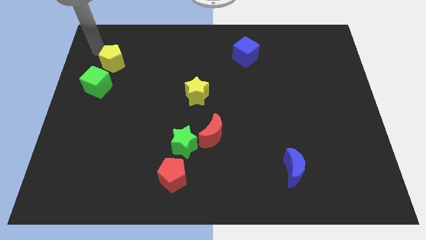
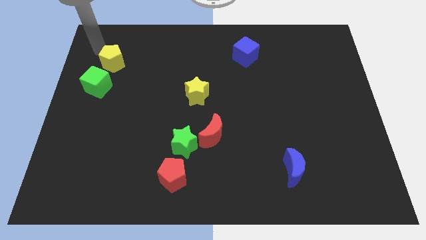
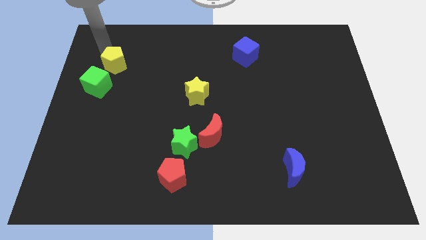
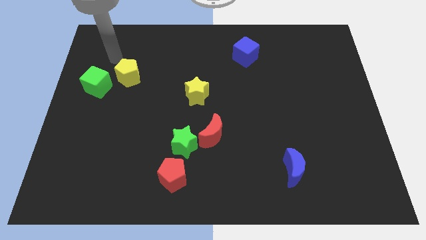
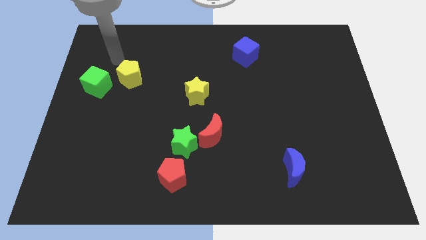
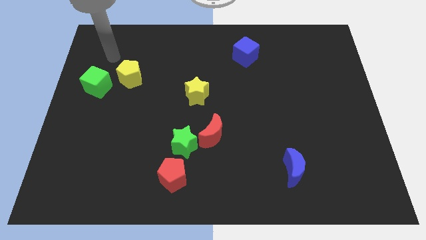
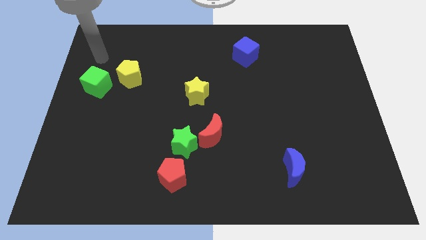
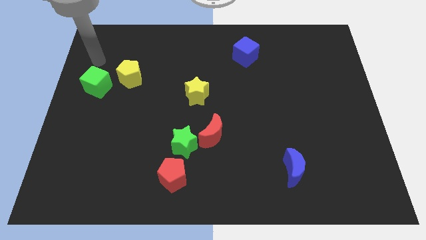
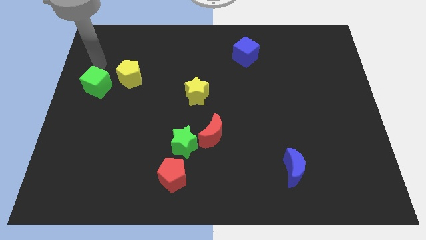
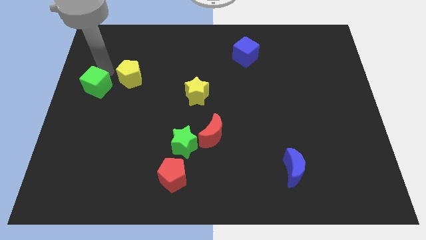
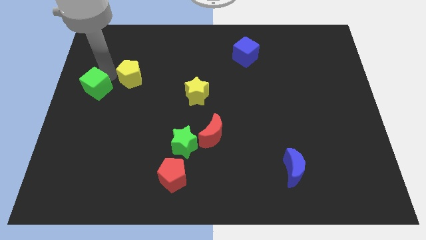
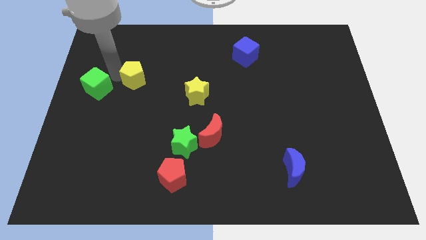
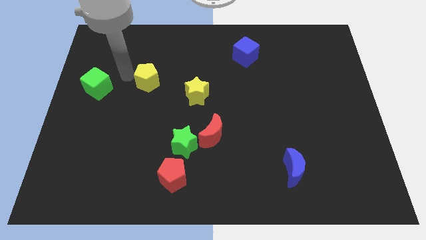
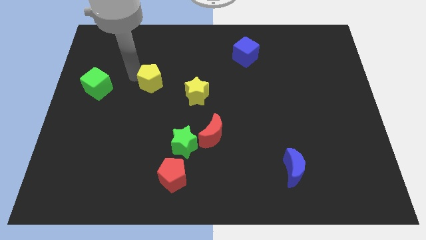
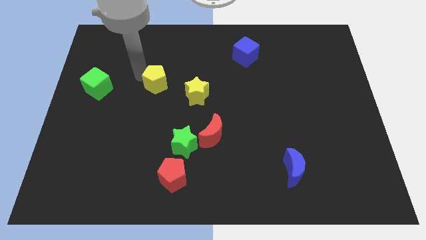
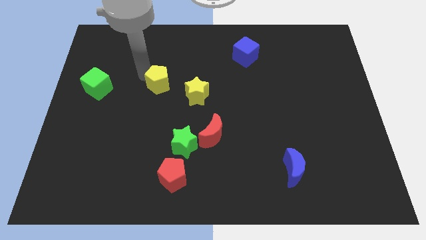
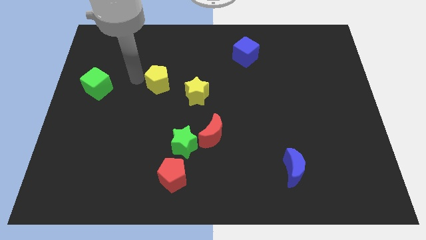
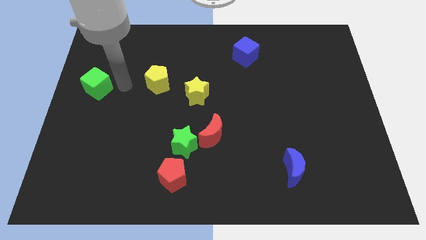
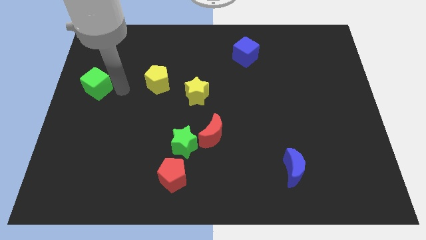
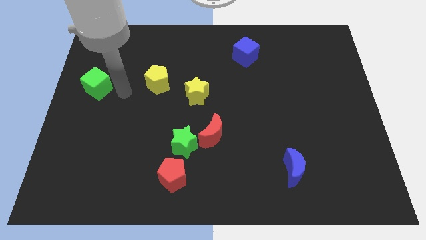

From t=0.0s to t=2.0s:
move the yellow pentagon towards the yellow star

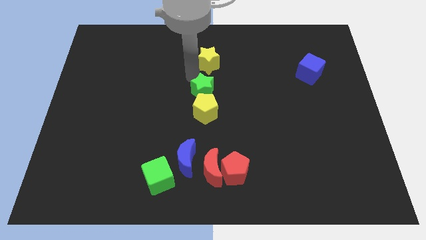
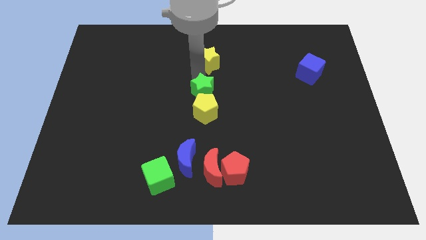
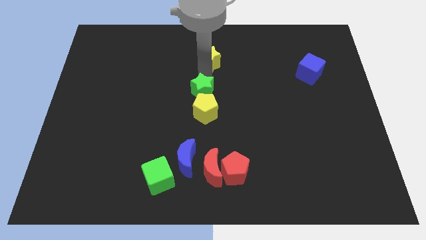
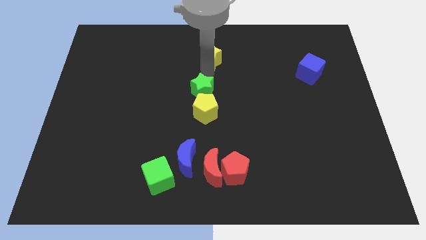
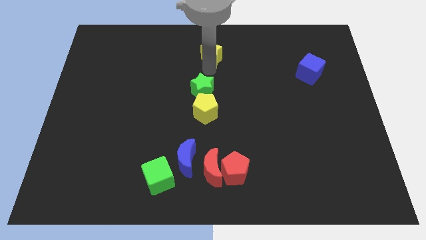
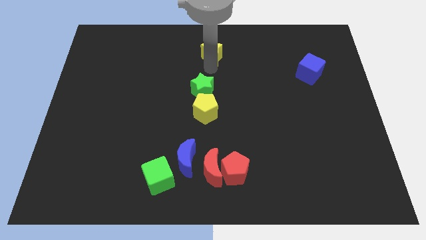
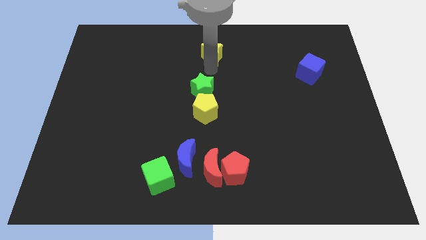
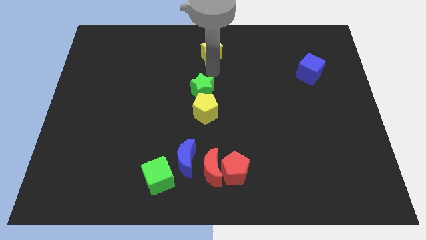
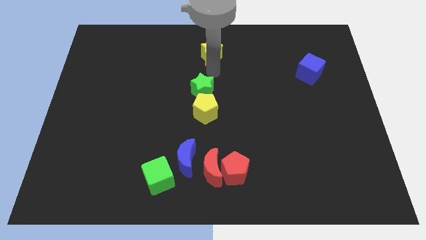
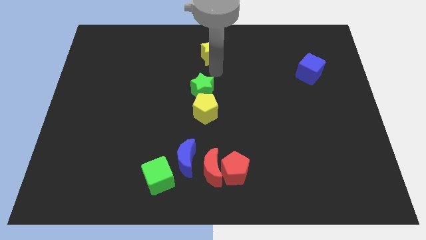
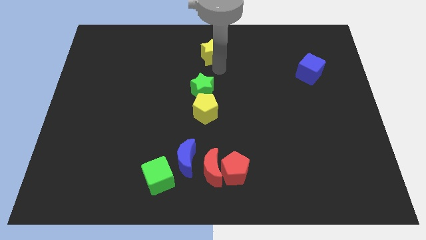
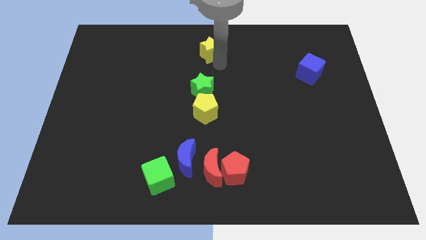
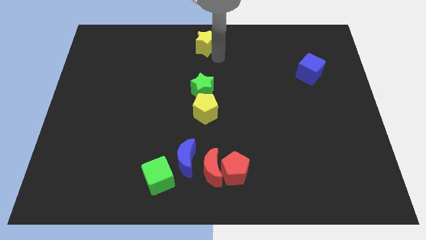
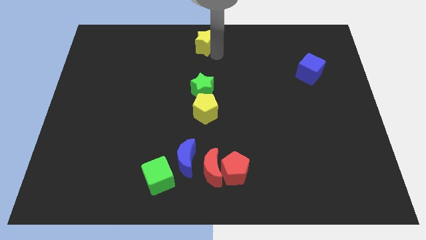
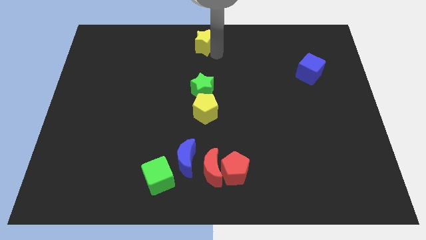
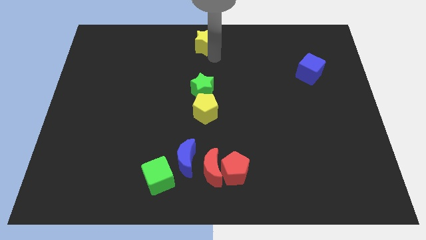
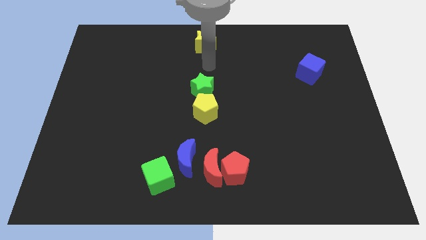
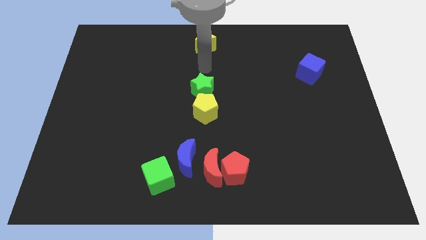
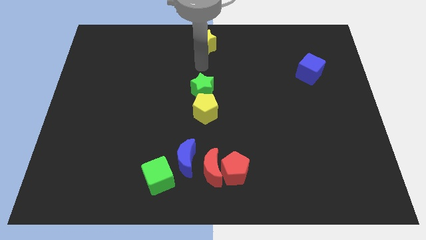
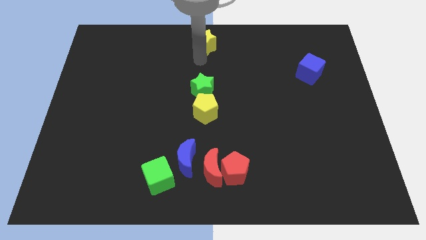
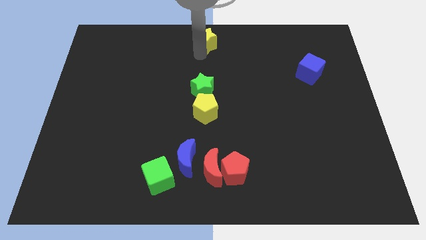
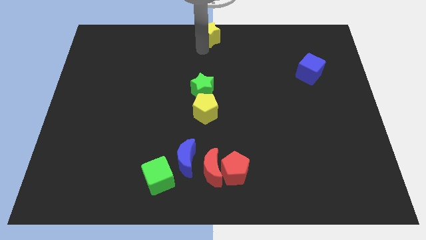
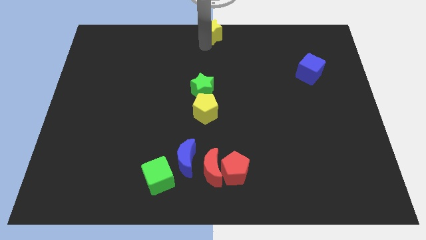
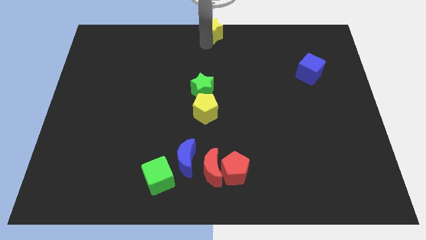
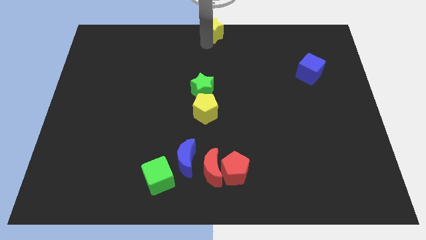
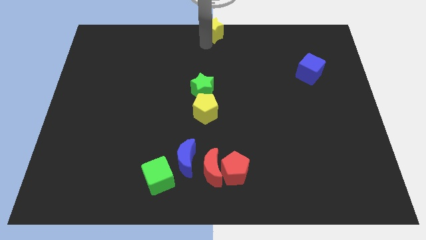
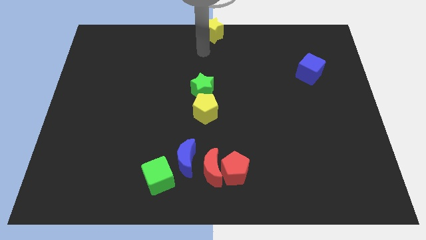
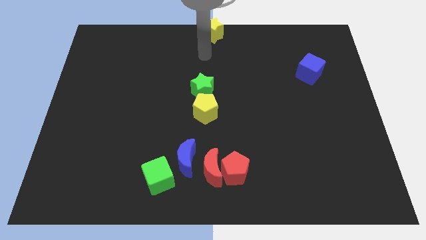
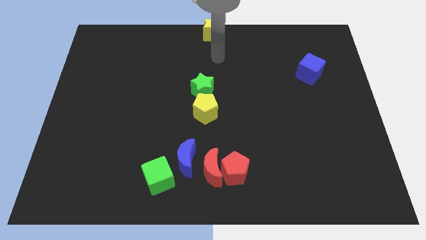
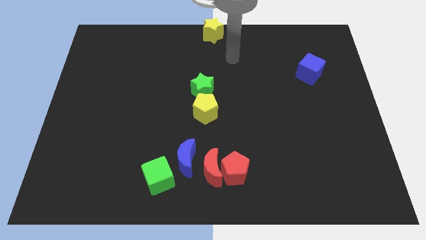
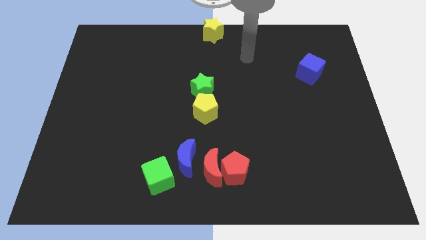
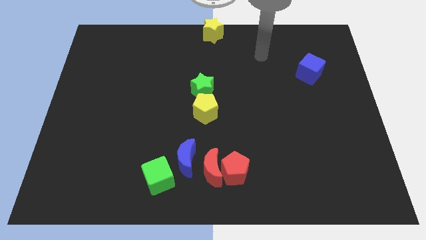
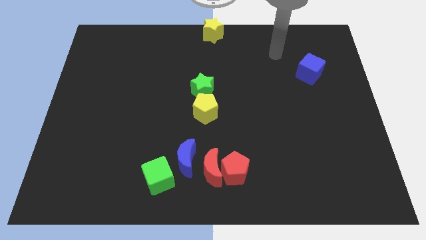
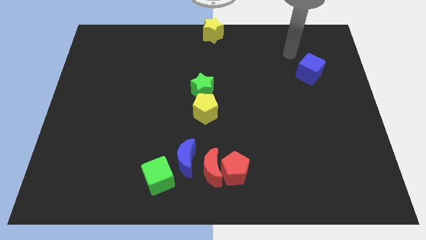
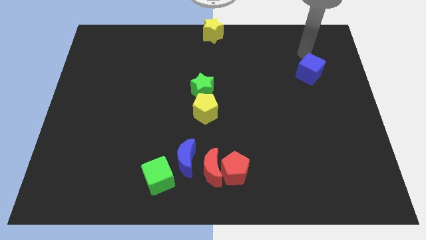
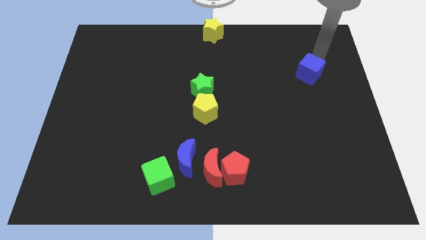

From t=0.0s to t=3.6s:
place the yellow star at the top center

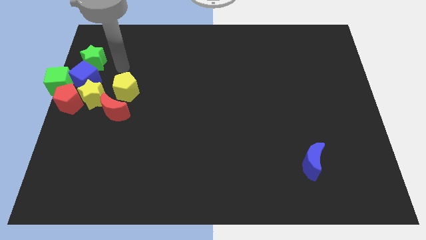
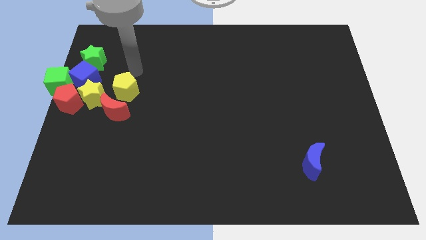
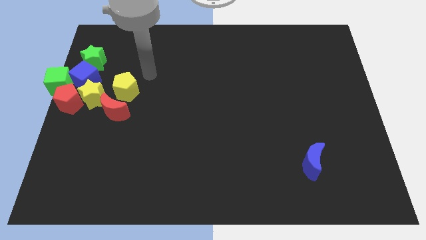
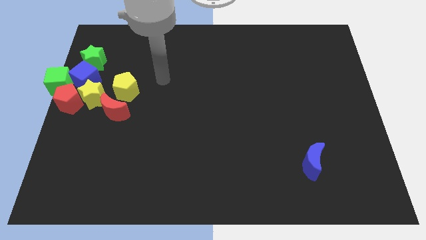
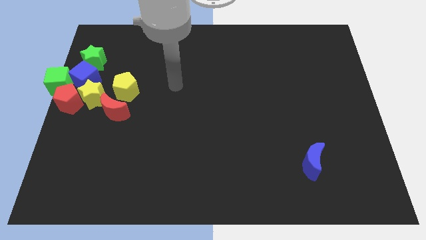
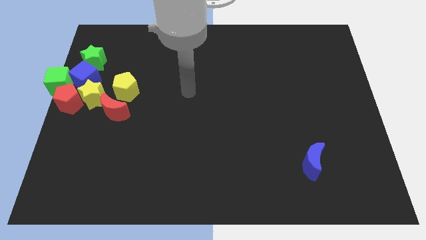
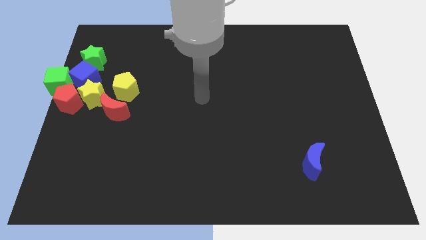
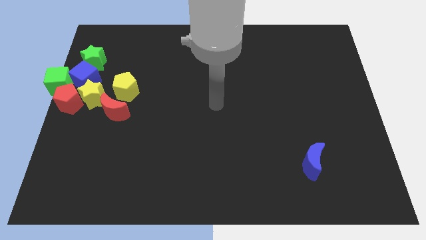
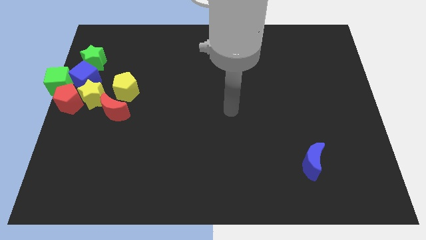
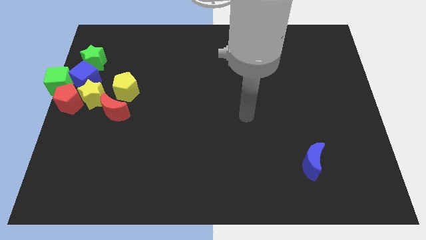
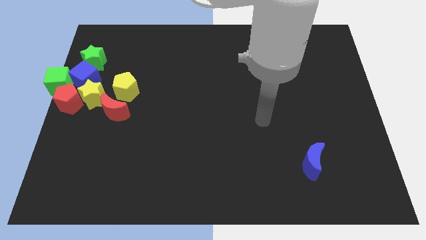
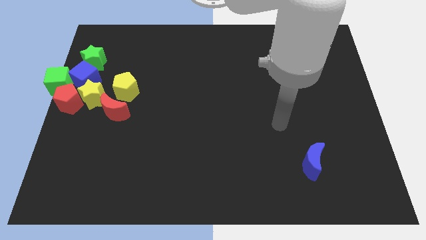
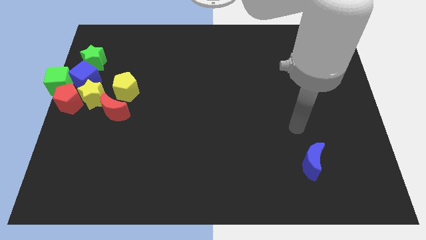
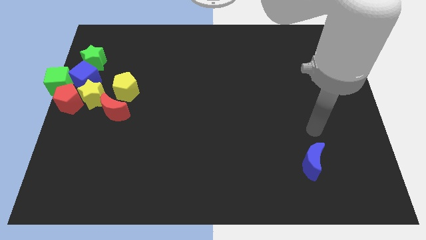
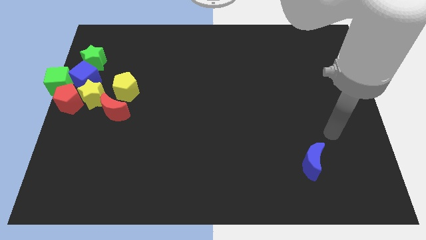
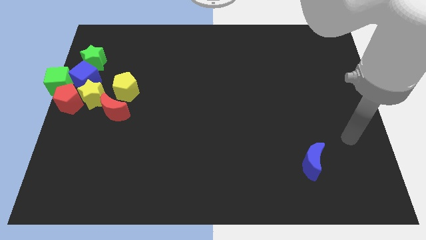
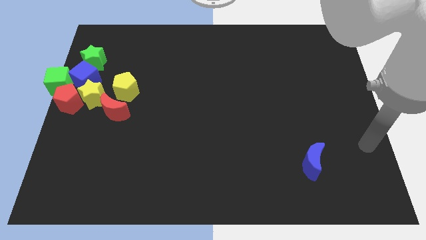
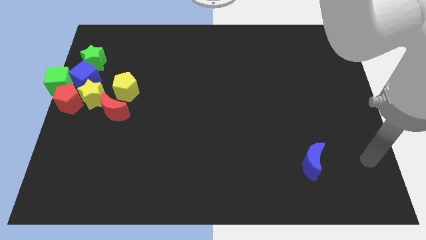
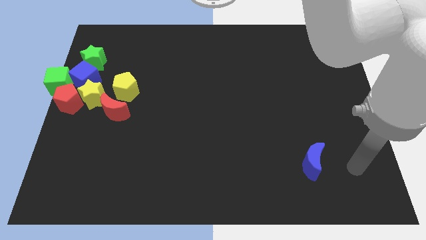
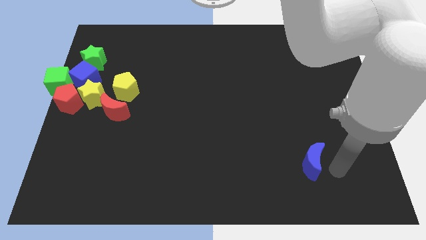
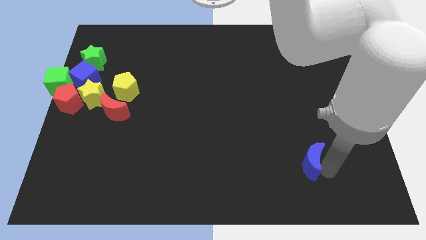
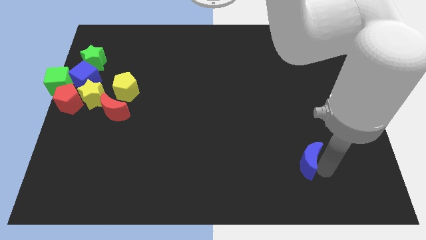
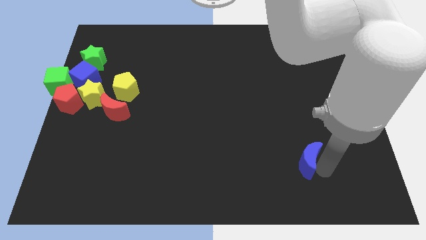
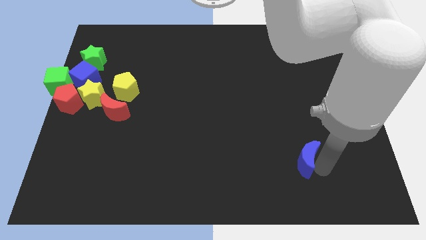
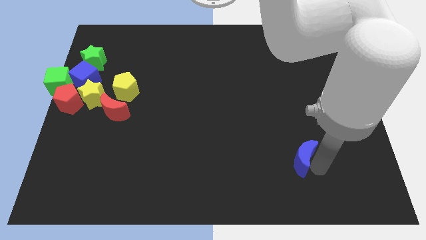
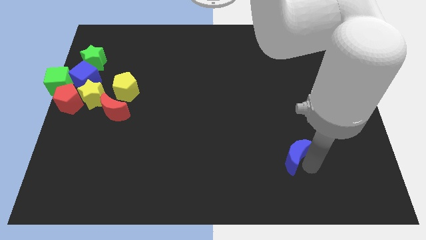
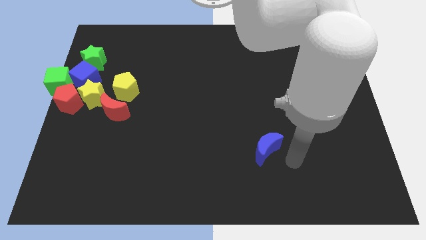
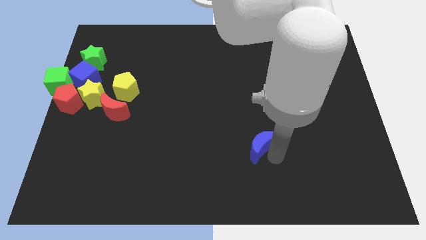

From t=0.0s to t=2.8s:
move the blue crescent towards the center of the board

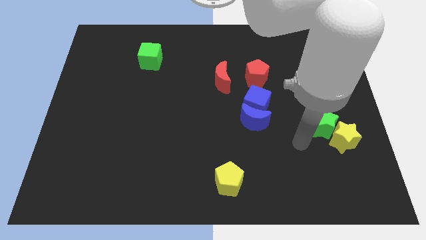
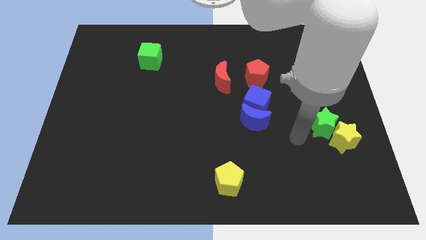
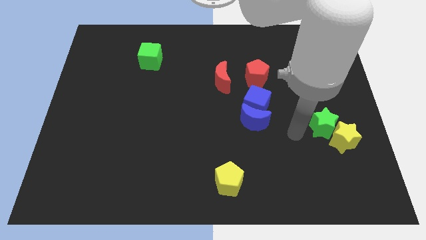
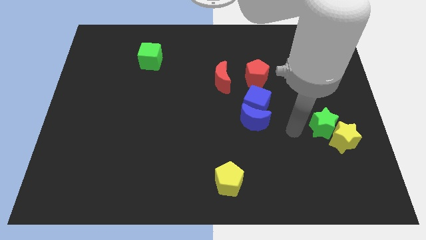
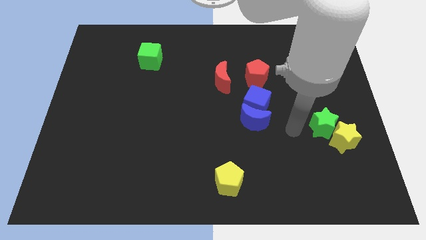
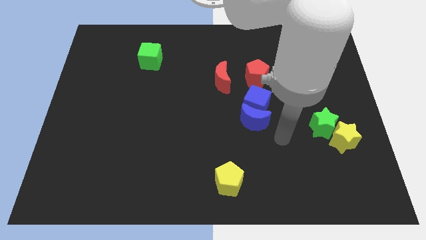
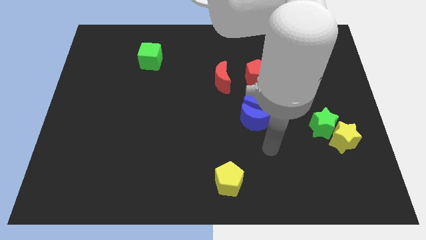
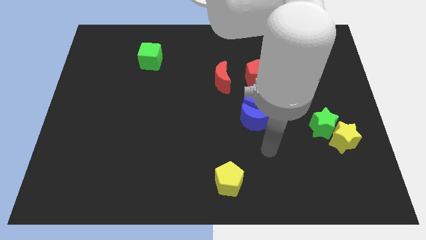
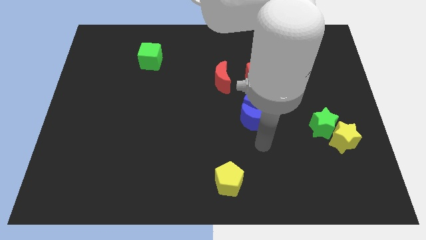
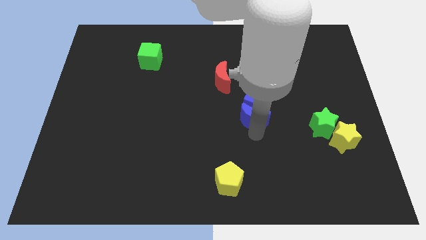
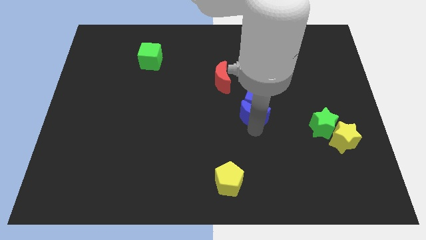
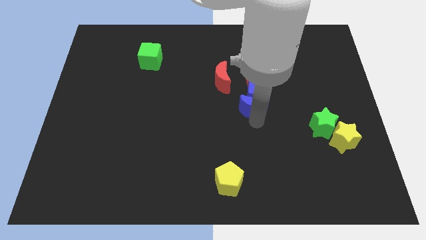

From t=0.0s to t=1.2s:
move blue blocks into red pentagon
